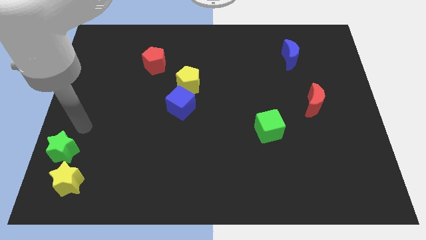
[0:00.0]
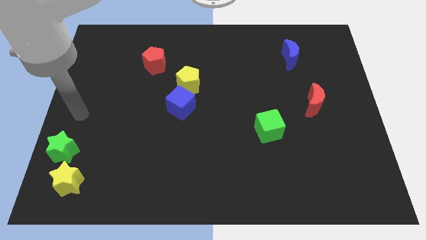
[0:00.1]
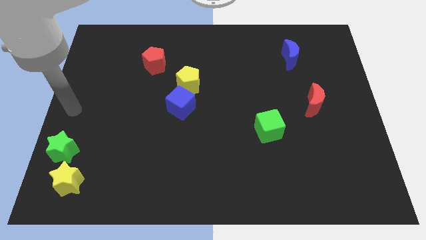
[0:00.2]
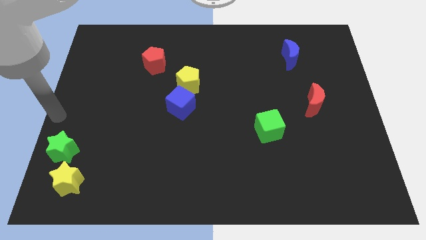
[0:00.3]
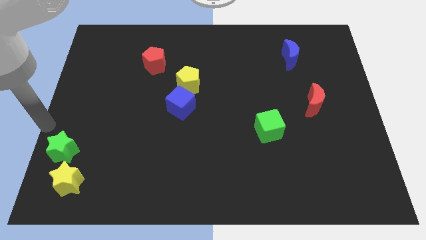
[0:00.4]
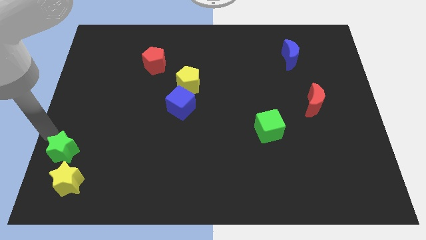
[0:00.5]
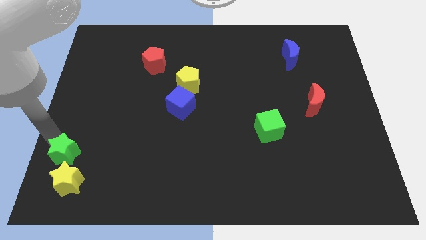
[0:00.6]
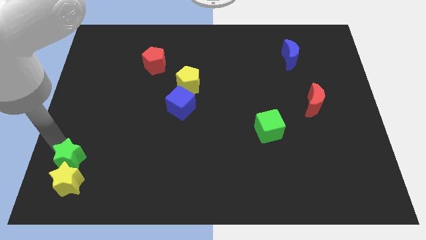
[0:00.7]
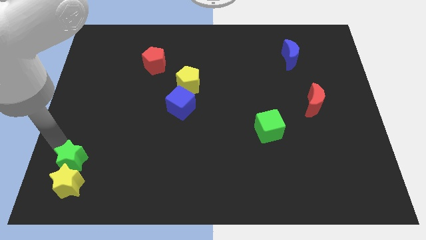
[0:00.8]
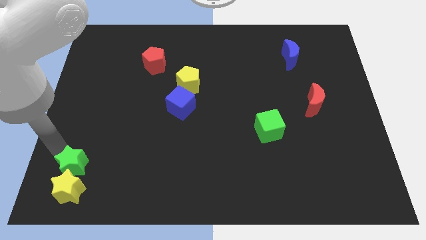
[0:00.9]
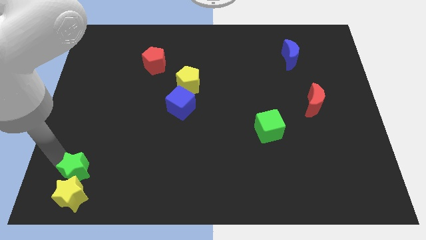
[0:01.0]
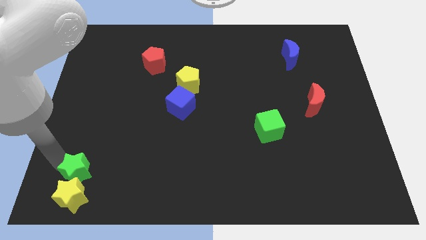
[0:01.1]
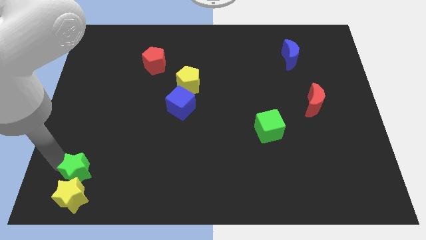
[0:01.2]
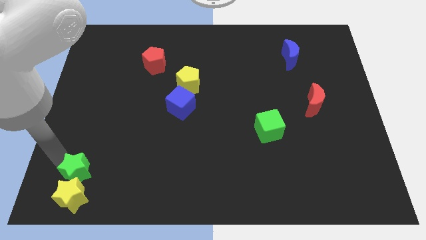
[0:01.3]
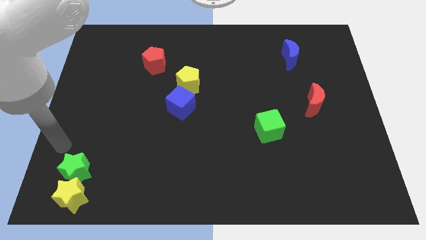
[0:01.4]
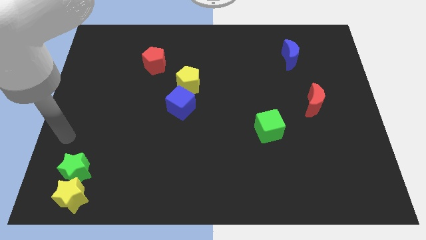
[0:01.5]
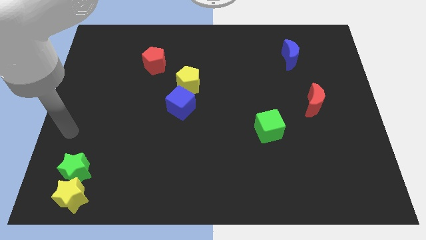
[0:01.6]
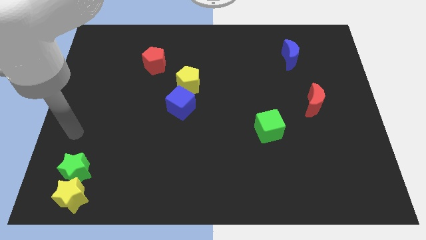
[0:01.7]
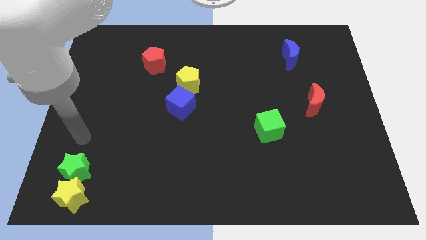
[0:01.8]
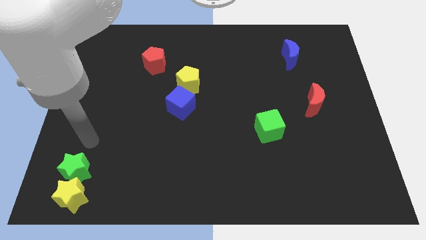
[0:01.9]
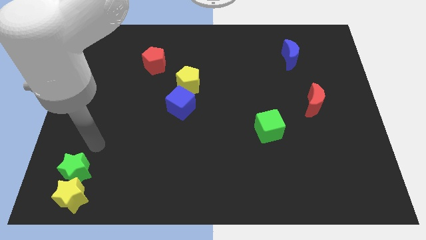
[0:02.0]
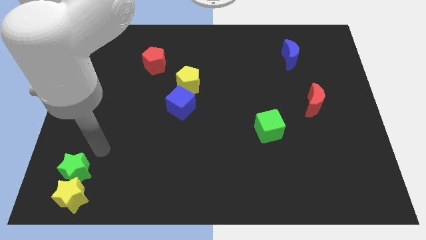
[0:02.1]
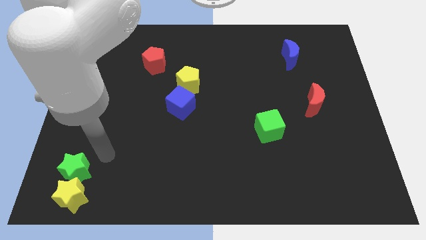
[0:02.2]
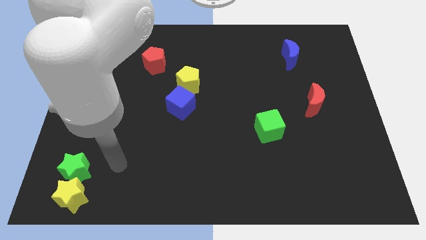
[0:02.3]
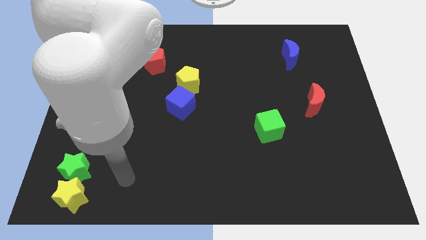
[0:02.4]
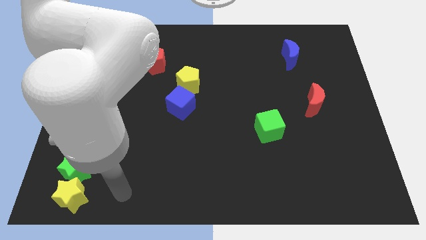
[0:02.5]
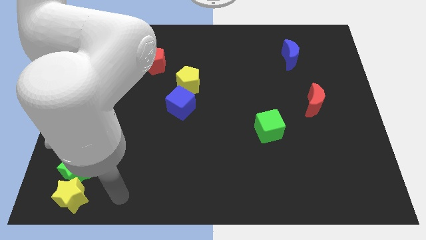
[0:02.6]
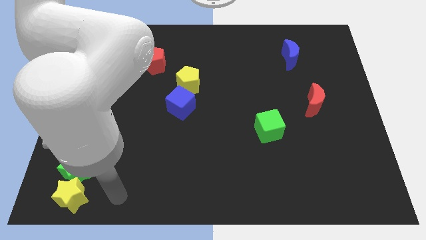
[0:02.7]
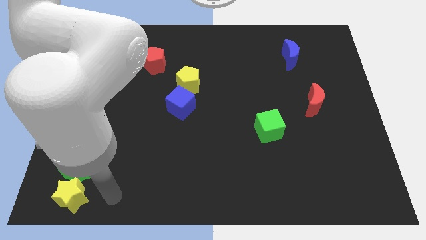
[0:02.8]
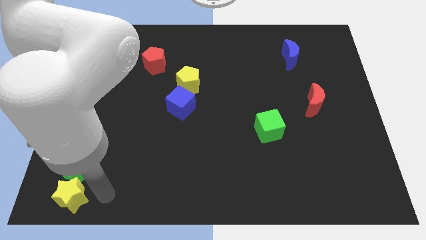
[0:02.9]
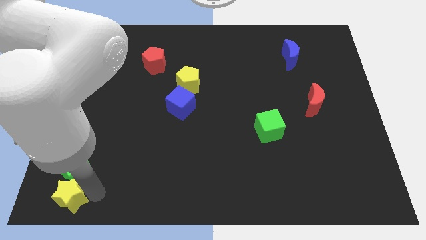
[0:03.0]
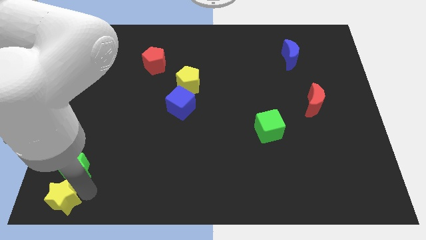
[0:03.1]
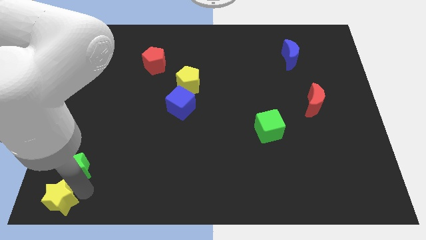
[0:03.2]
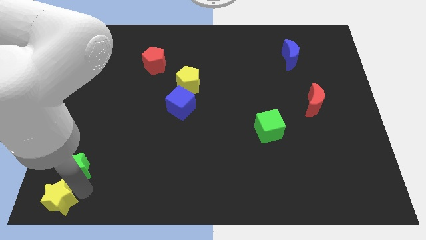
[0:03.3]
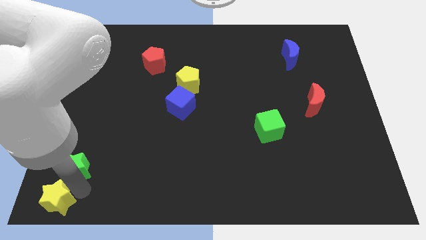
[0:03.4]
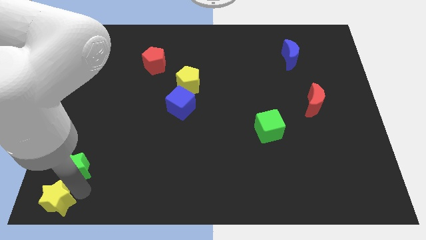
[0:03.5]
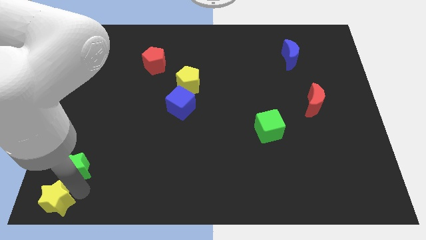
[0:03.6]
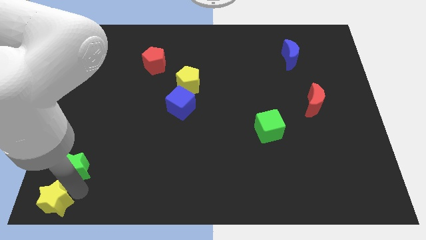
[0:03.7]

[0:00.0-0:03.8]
move the green star along with the yellow star slightly to the bottom

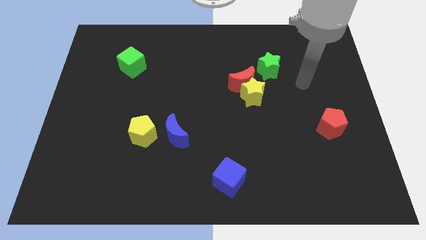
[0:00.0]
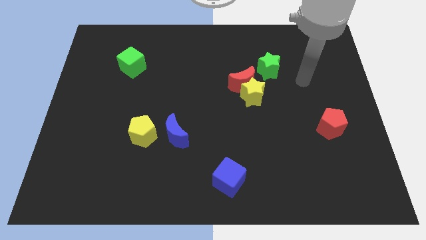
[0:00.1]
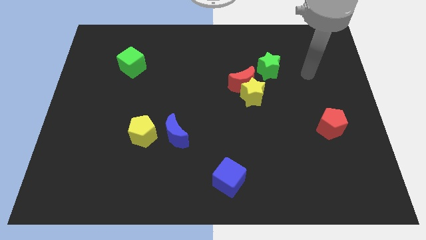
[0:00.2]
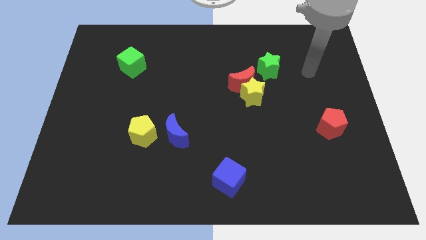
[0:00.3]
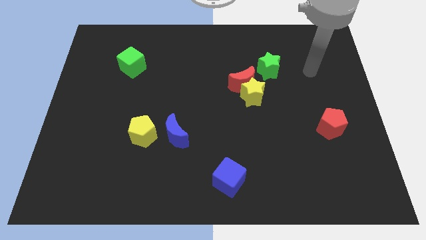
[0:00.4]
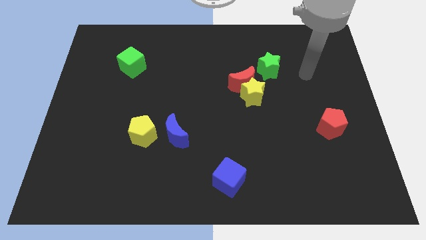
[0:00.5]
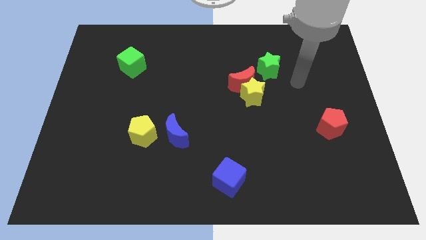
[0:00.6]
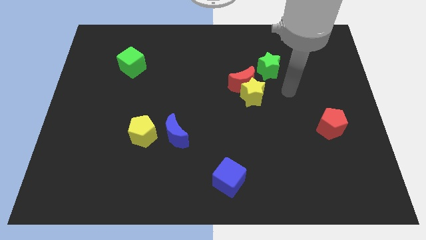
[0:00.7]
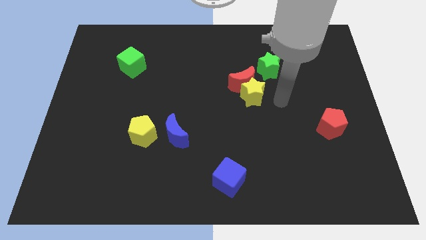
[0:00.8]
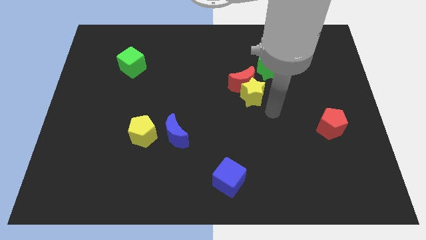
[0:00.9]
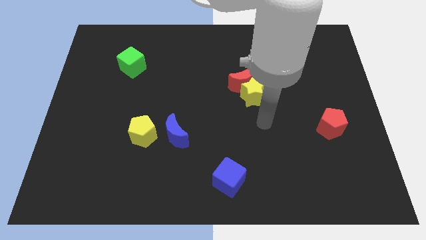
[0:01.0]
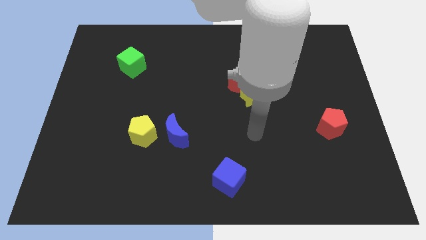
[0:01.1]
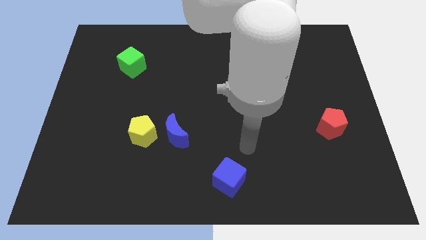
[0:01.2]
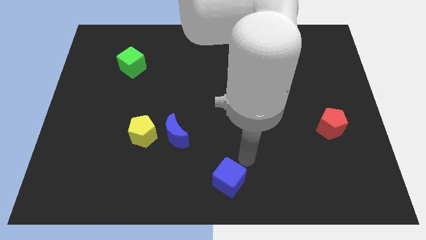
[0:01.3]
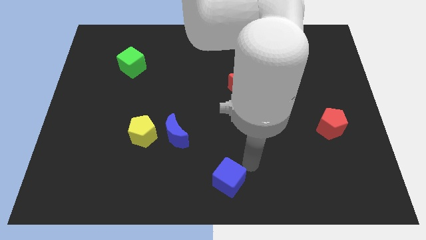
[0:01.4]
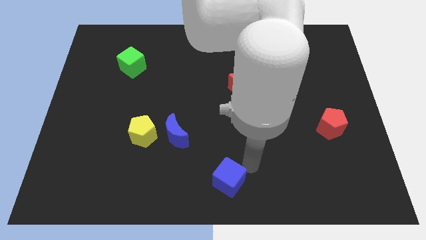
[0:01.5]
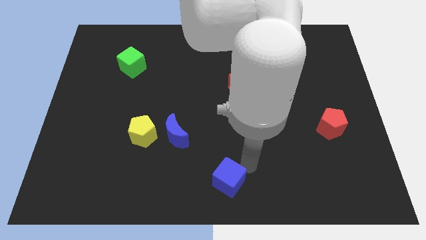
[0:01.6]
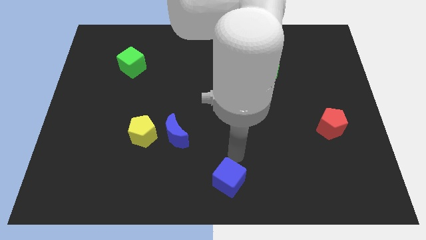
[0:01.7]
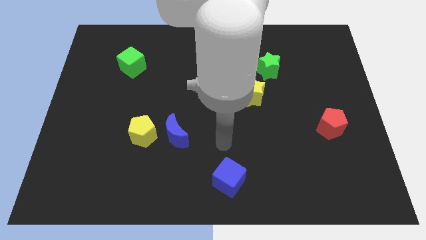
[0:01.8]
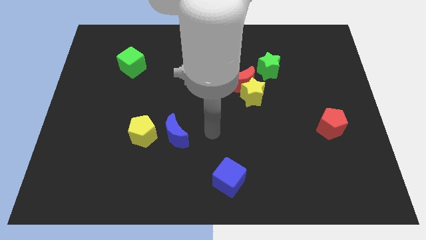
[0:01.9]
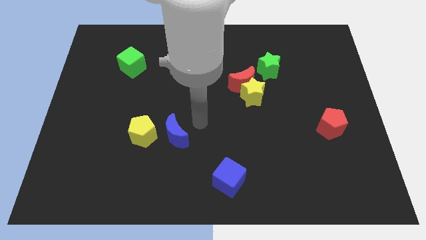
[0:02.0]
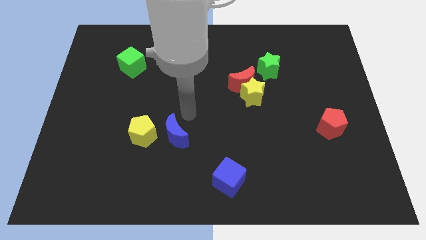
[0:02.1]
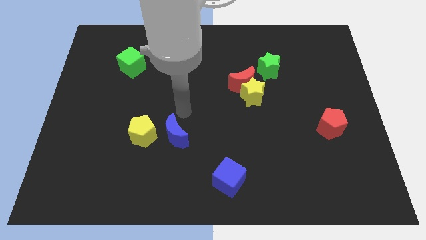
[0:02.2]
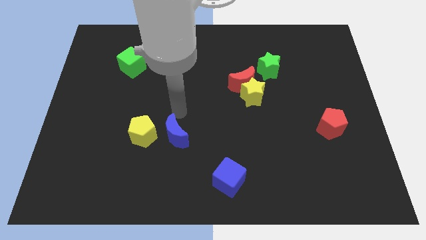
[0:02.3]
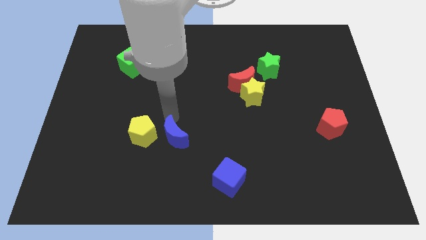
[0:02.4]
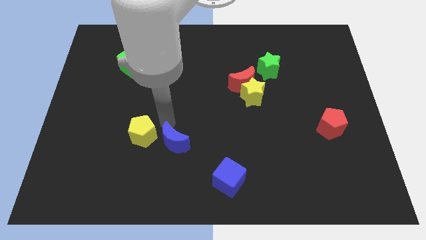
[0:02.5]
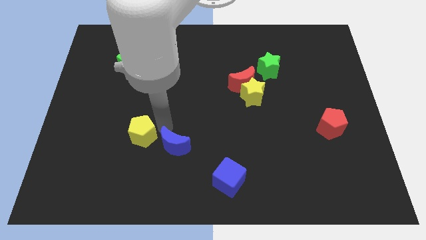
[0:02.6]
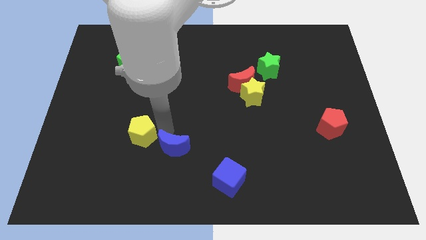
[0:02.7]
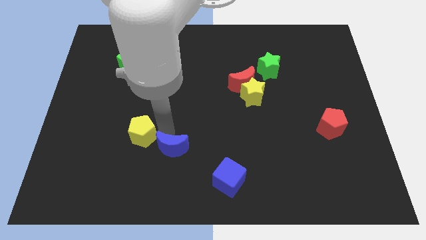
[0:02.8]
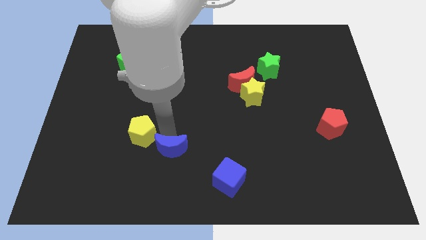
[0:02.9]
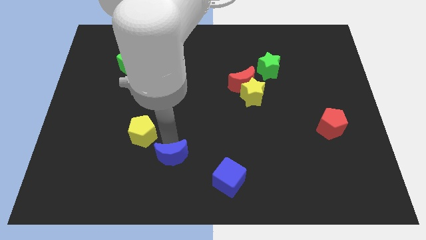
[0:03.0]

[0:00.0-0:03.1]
move blue moon towards the blue cube

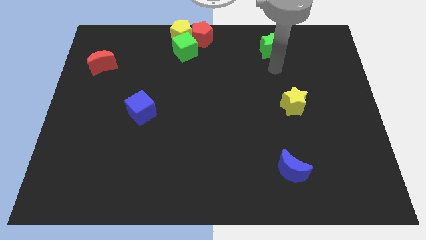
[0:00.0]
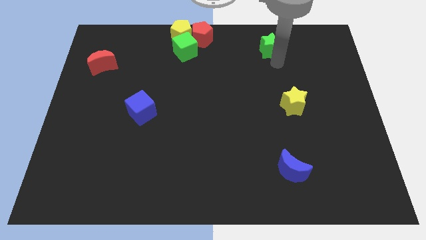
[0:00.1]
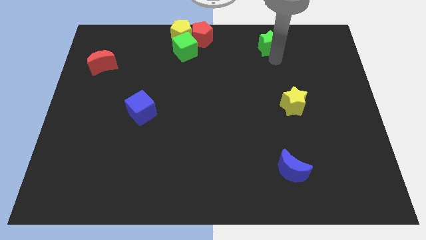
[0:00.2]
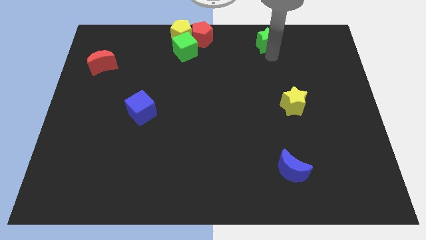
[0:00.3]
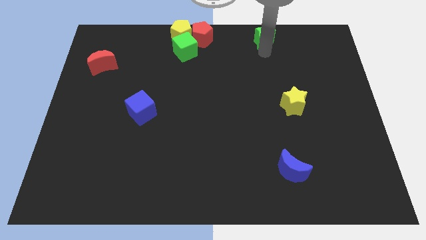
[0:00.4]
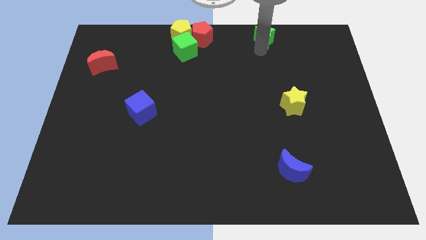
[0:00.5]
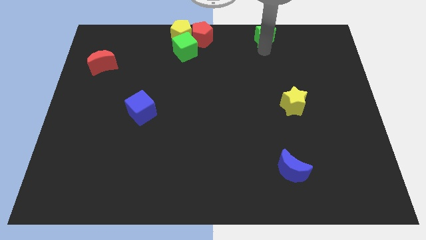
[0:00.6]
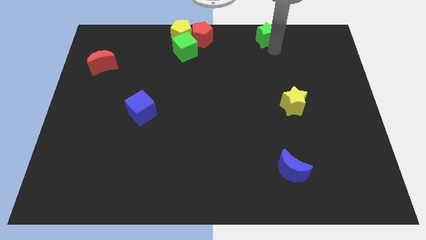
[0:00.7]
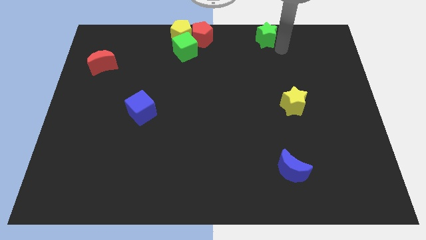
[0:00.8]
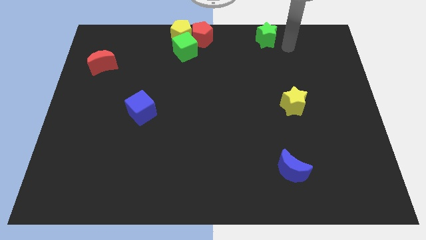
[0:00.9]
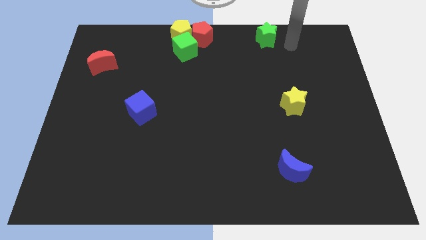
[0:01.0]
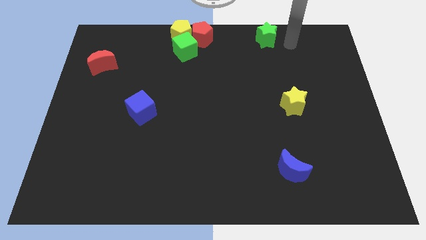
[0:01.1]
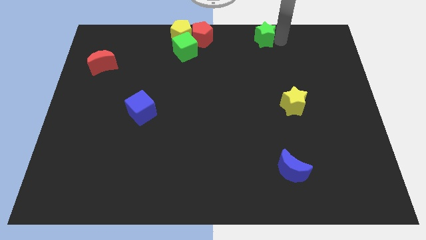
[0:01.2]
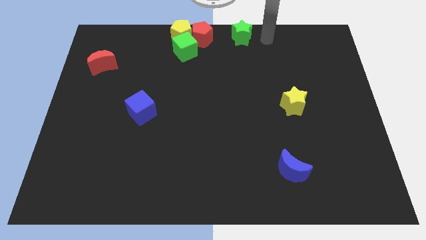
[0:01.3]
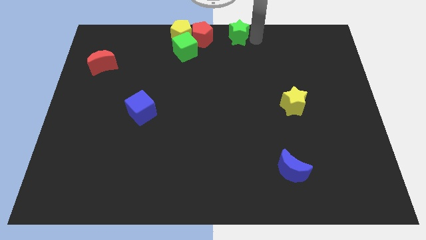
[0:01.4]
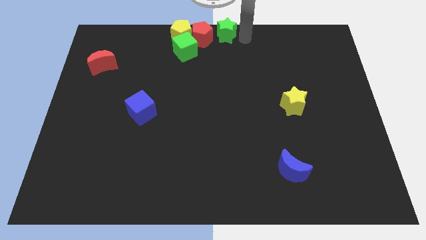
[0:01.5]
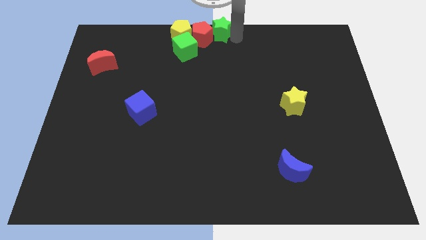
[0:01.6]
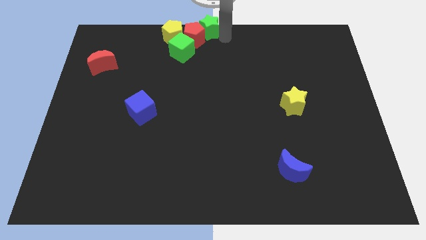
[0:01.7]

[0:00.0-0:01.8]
push the green star into red pentagon

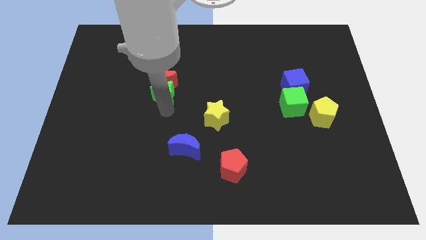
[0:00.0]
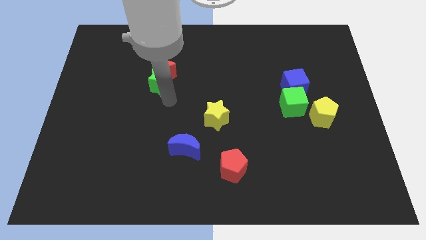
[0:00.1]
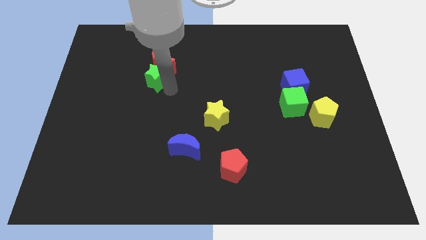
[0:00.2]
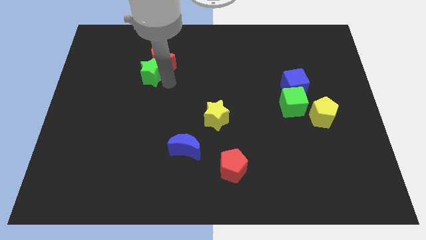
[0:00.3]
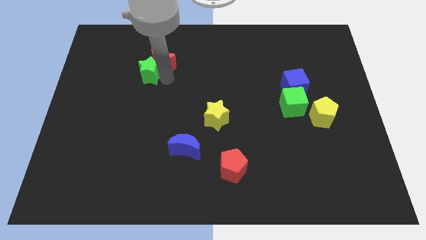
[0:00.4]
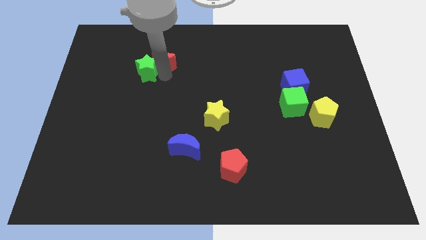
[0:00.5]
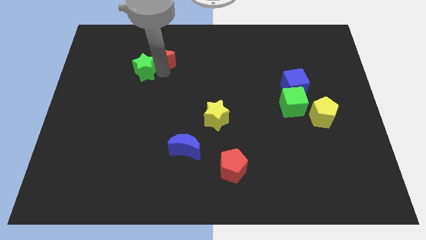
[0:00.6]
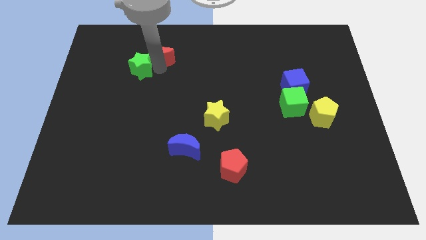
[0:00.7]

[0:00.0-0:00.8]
push green star into red moon
